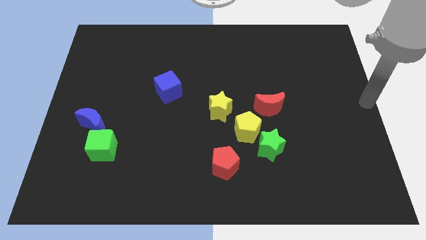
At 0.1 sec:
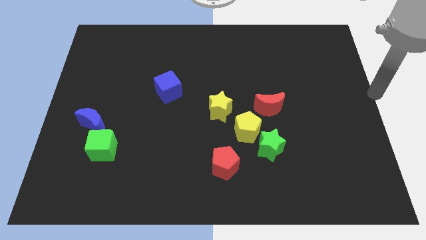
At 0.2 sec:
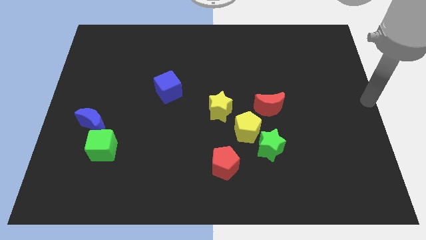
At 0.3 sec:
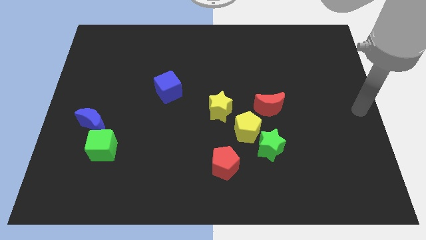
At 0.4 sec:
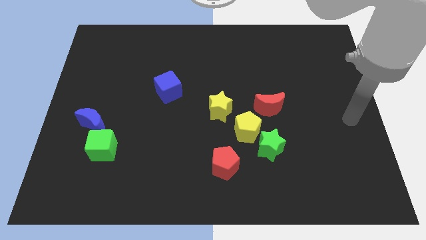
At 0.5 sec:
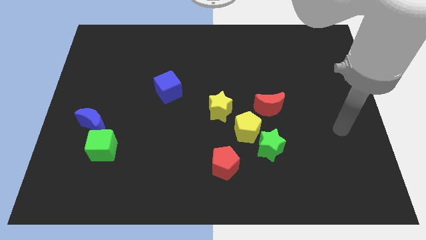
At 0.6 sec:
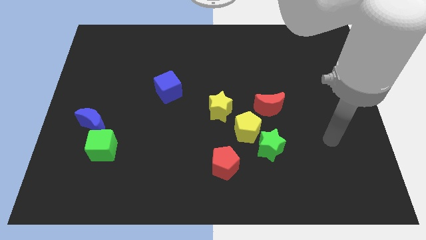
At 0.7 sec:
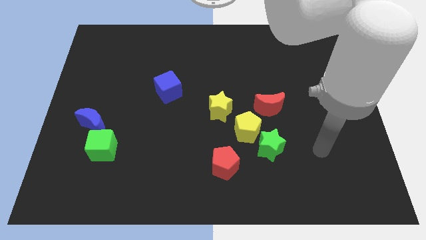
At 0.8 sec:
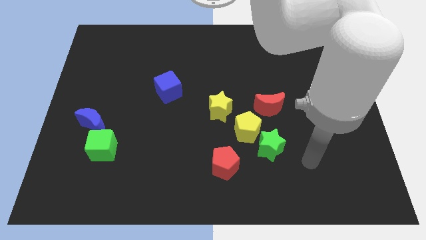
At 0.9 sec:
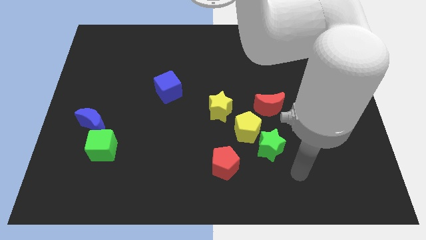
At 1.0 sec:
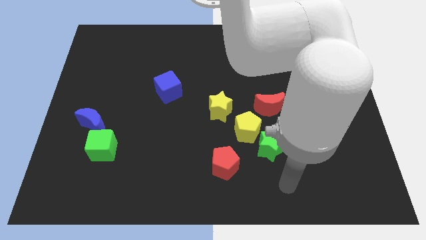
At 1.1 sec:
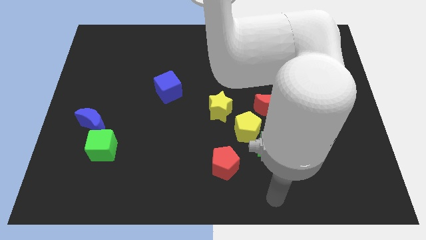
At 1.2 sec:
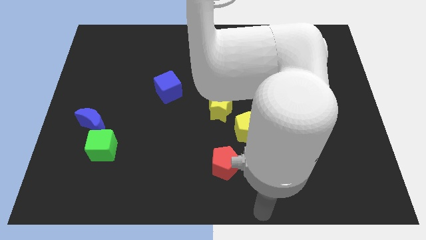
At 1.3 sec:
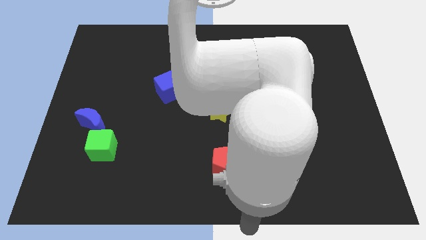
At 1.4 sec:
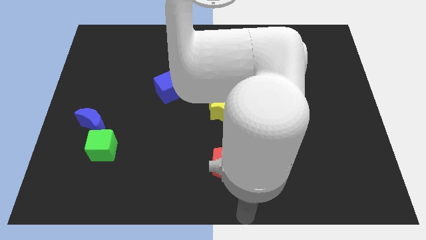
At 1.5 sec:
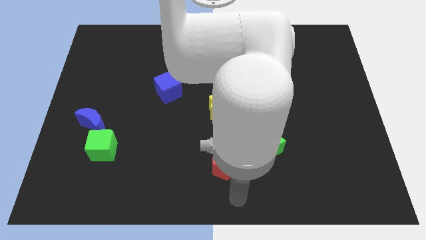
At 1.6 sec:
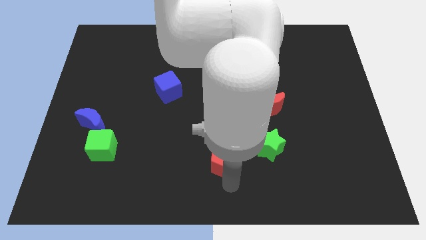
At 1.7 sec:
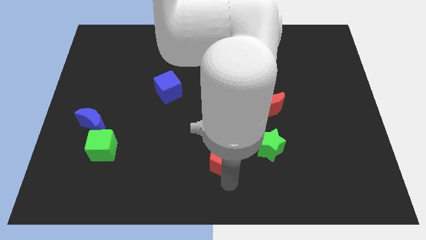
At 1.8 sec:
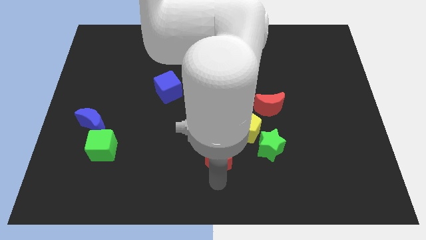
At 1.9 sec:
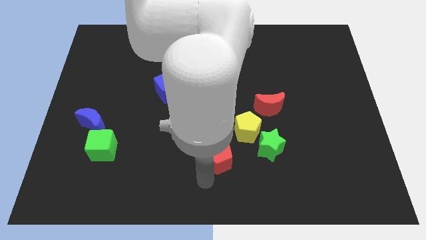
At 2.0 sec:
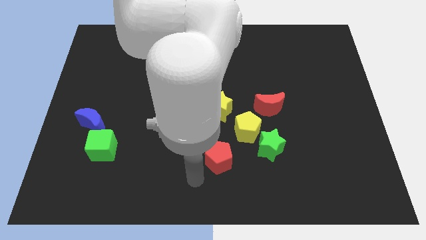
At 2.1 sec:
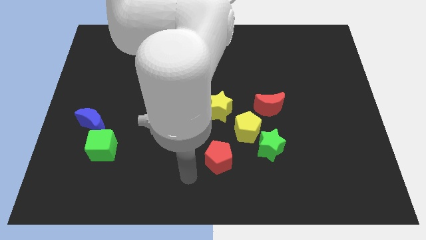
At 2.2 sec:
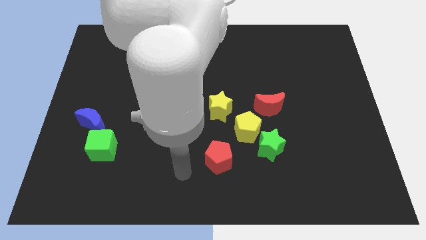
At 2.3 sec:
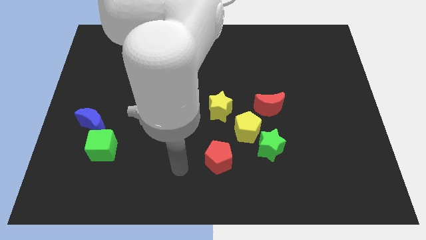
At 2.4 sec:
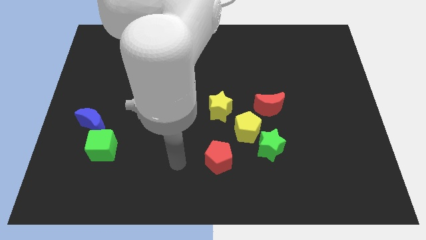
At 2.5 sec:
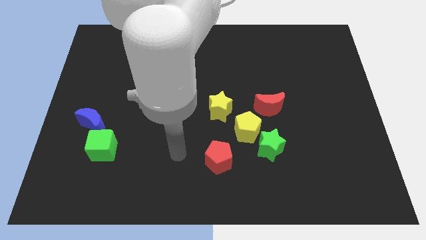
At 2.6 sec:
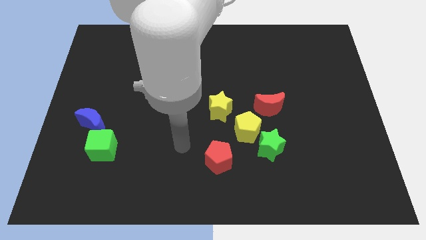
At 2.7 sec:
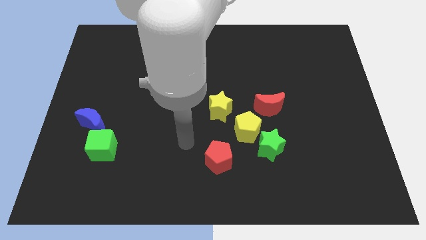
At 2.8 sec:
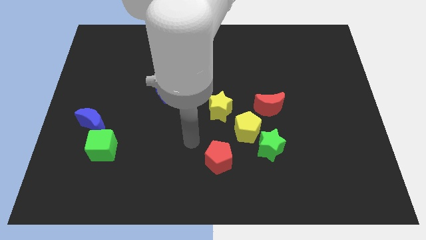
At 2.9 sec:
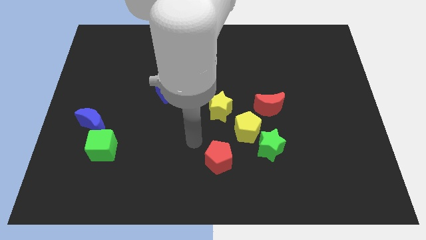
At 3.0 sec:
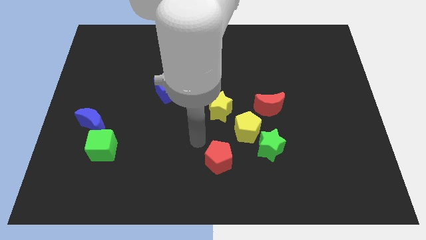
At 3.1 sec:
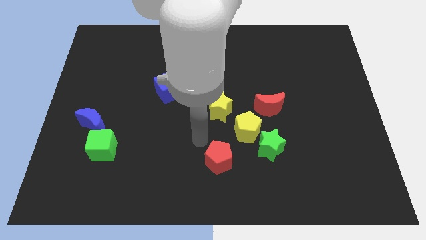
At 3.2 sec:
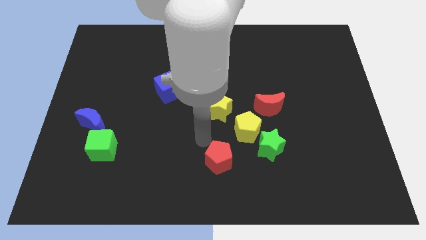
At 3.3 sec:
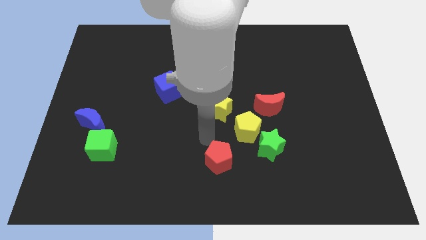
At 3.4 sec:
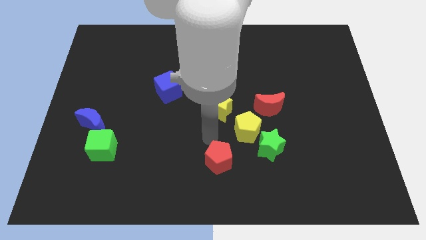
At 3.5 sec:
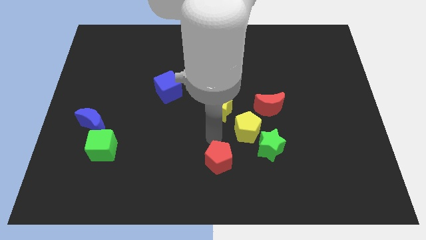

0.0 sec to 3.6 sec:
push the red pentagon slightly to the top of the board

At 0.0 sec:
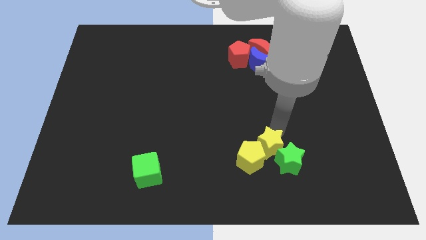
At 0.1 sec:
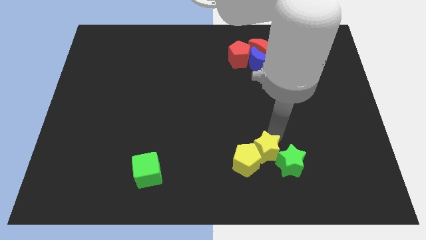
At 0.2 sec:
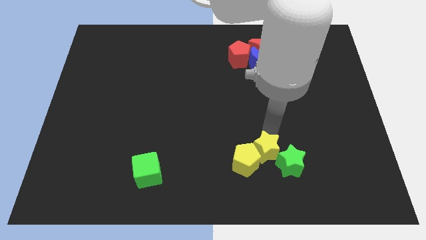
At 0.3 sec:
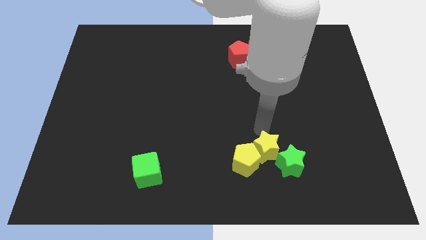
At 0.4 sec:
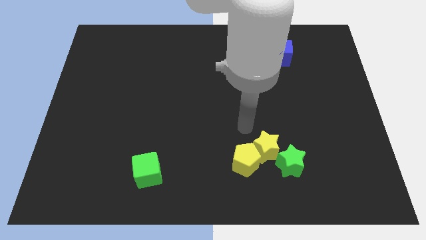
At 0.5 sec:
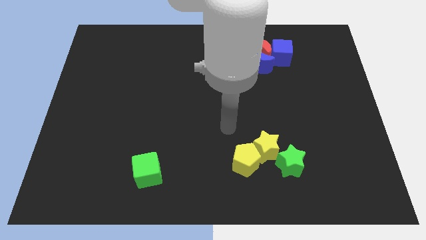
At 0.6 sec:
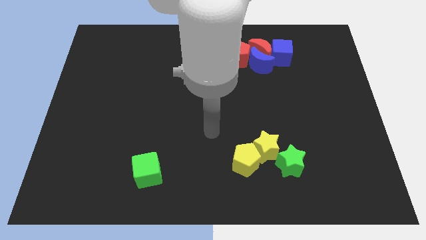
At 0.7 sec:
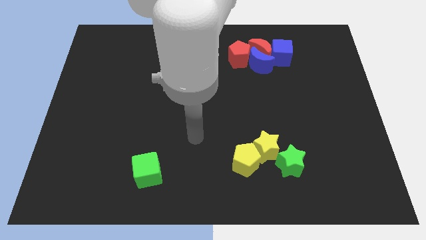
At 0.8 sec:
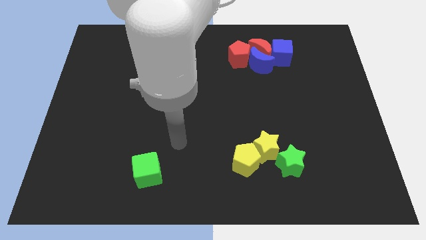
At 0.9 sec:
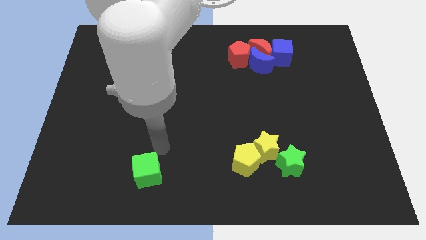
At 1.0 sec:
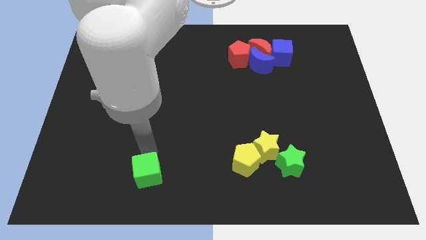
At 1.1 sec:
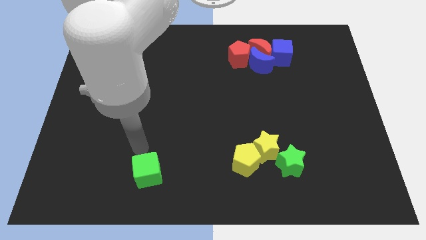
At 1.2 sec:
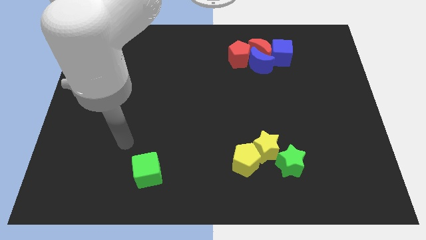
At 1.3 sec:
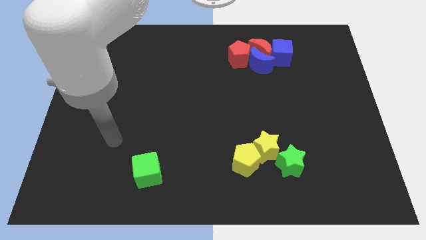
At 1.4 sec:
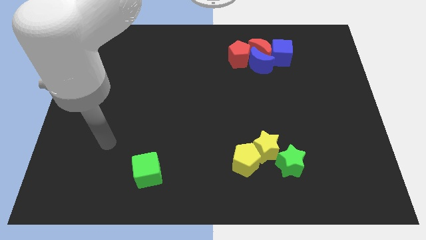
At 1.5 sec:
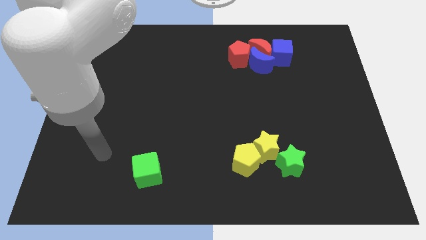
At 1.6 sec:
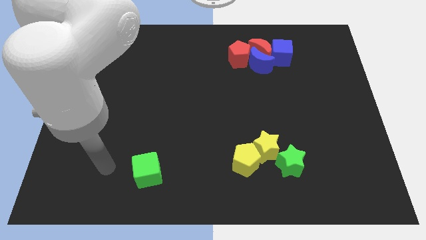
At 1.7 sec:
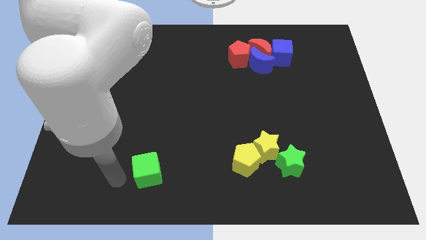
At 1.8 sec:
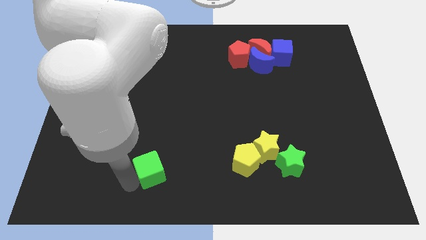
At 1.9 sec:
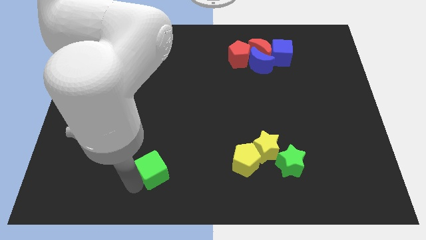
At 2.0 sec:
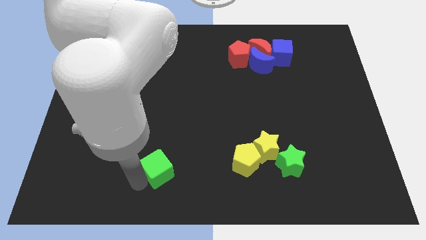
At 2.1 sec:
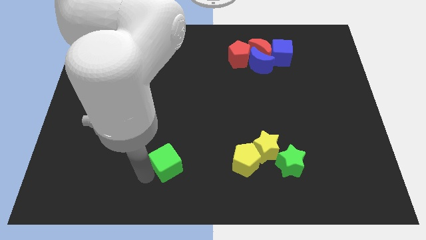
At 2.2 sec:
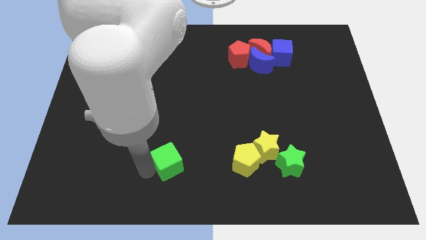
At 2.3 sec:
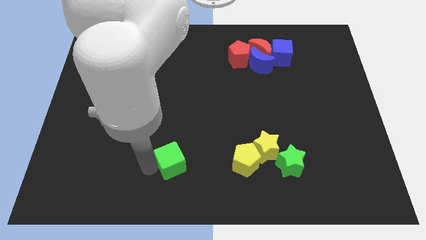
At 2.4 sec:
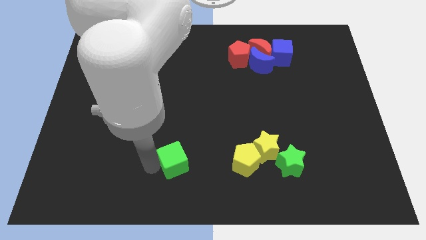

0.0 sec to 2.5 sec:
slightly push the green star towrads to the middle of the table

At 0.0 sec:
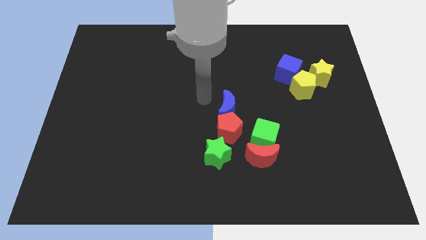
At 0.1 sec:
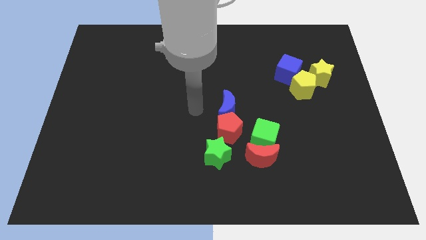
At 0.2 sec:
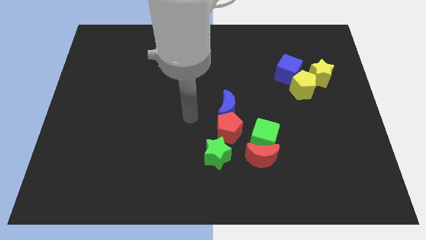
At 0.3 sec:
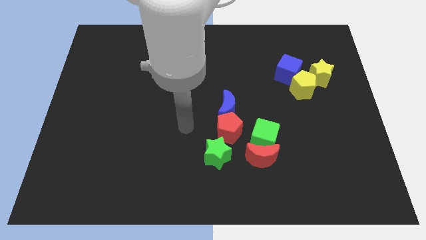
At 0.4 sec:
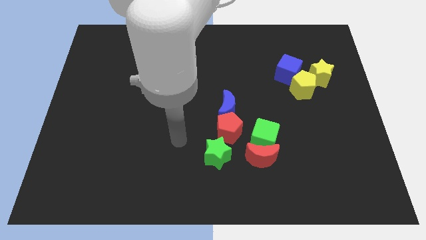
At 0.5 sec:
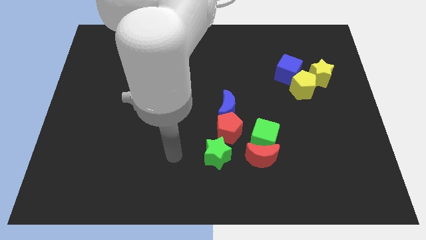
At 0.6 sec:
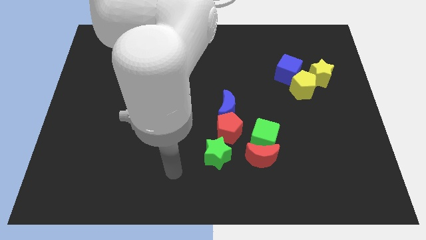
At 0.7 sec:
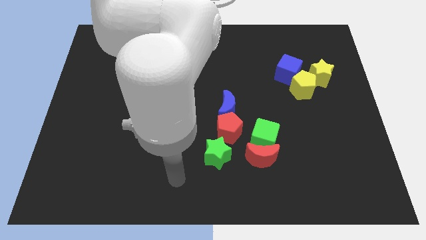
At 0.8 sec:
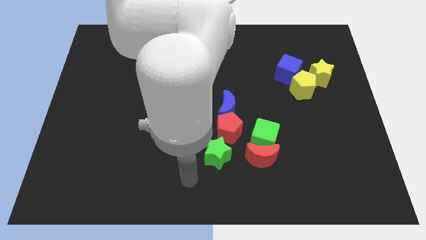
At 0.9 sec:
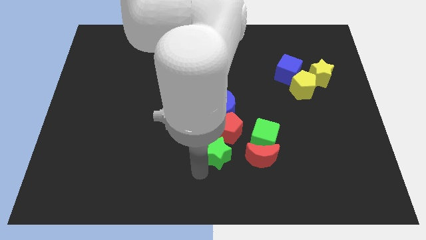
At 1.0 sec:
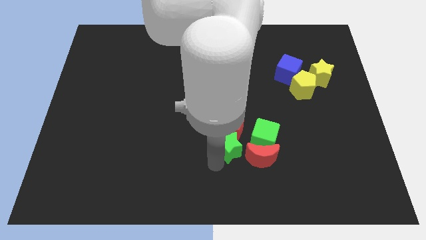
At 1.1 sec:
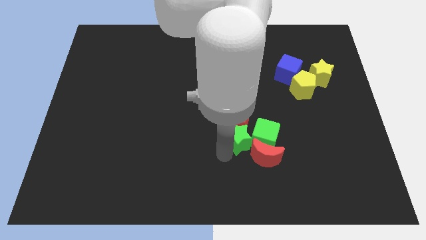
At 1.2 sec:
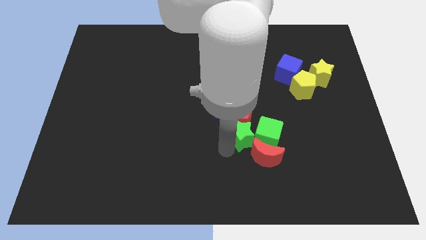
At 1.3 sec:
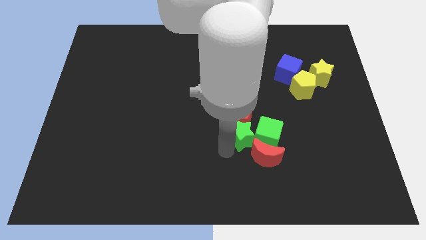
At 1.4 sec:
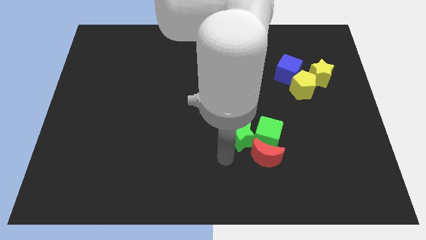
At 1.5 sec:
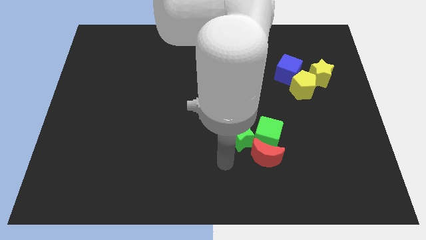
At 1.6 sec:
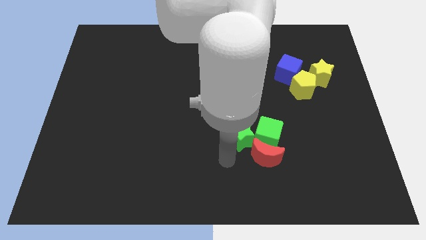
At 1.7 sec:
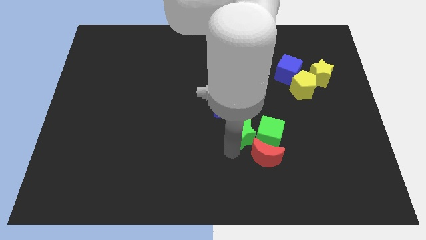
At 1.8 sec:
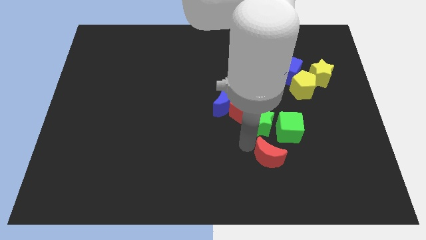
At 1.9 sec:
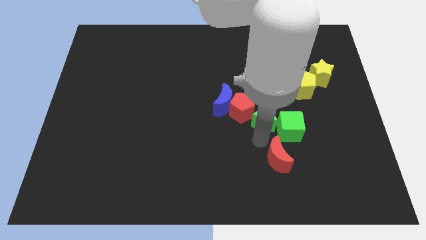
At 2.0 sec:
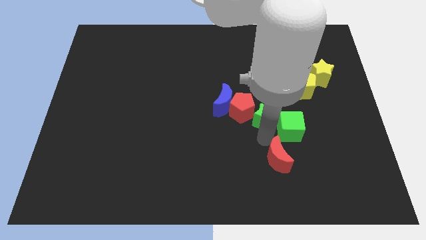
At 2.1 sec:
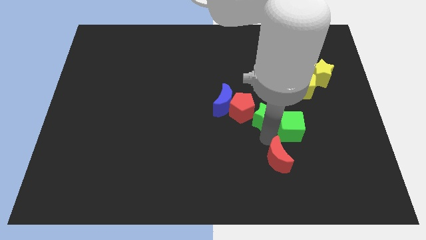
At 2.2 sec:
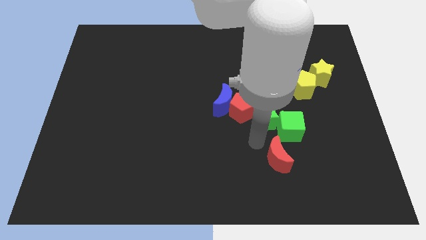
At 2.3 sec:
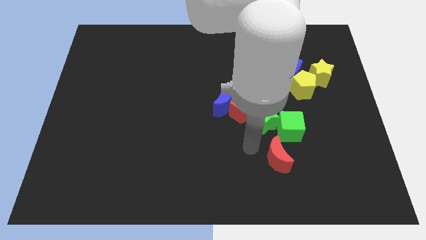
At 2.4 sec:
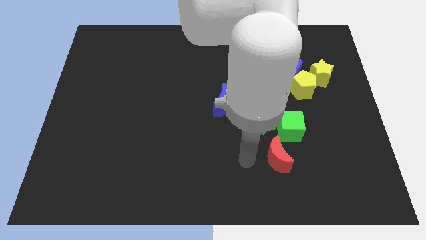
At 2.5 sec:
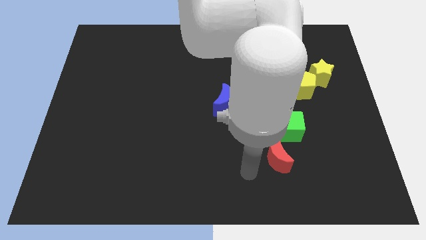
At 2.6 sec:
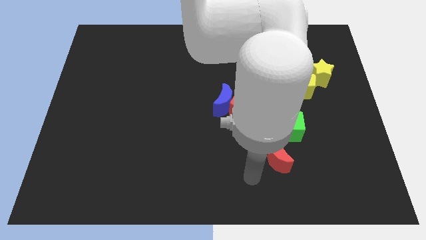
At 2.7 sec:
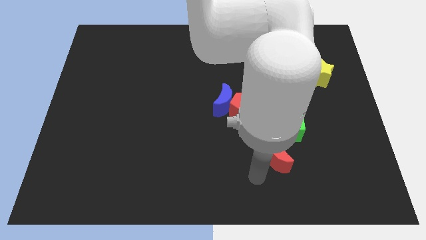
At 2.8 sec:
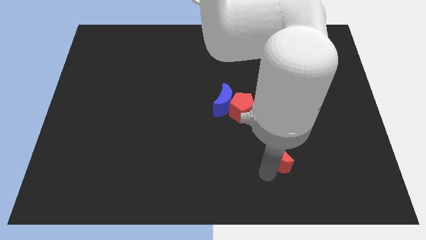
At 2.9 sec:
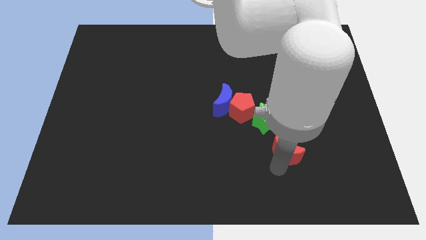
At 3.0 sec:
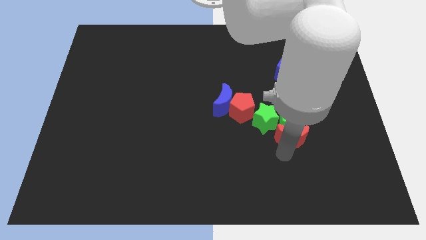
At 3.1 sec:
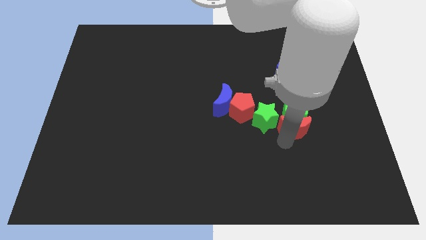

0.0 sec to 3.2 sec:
place green star in between red blocks
